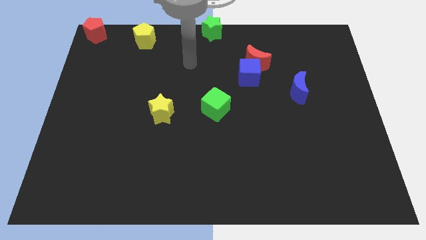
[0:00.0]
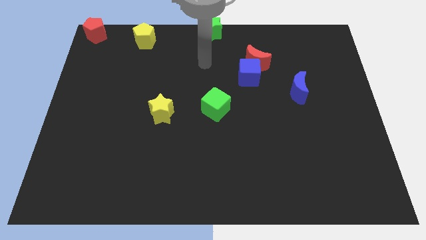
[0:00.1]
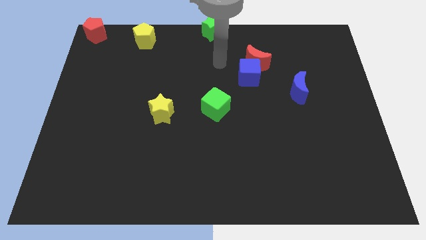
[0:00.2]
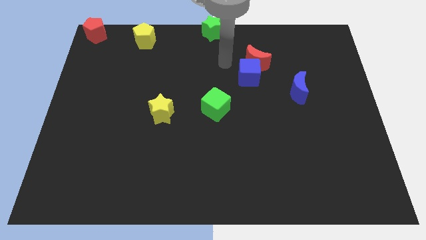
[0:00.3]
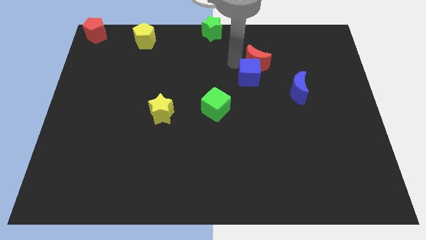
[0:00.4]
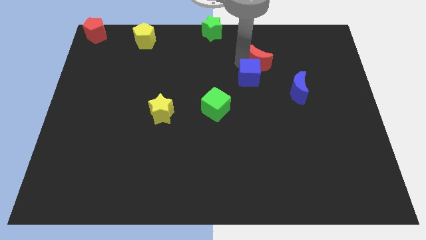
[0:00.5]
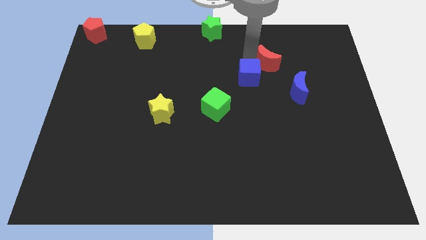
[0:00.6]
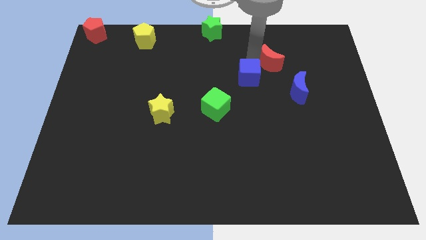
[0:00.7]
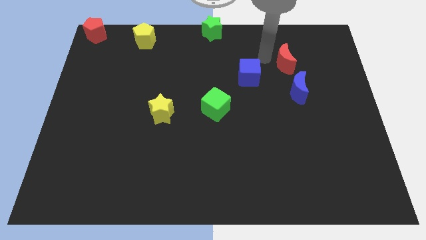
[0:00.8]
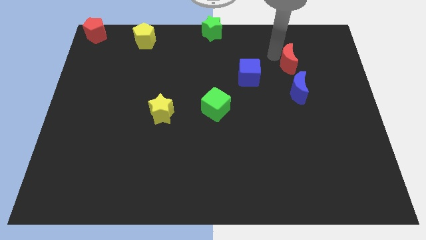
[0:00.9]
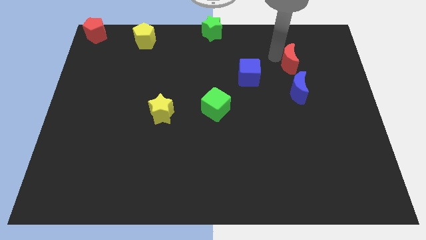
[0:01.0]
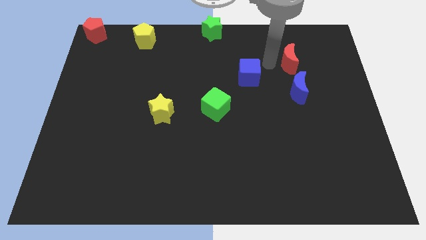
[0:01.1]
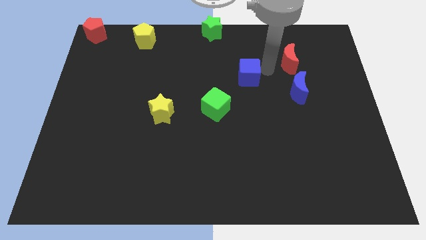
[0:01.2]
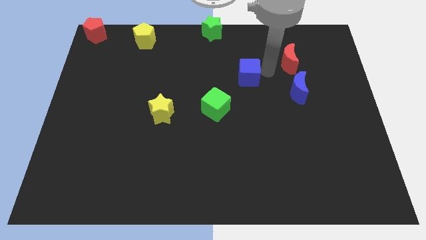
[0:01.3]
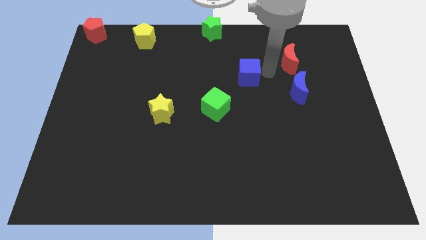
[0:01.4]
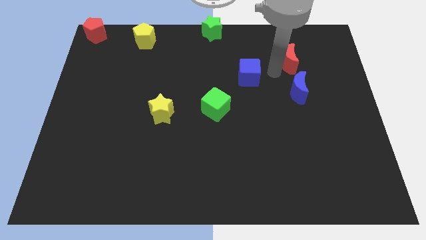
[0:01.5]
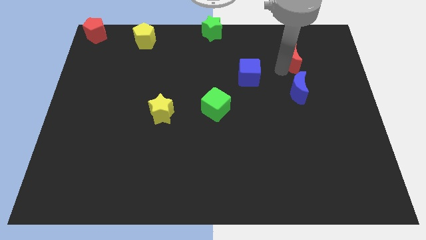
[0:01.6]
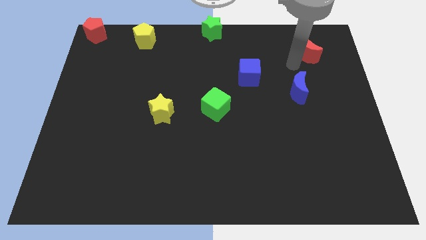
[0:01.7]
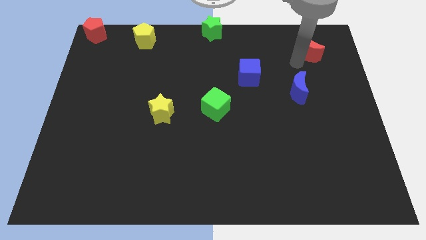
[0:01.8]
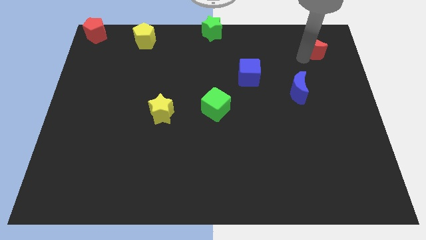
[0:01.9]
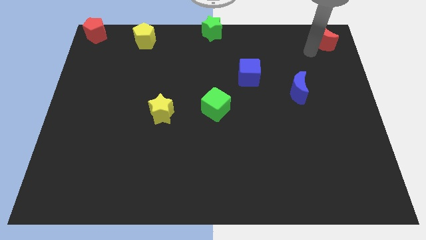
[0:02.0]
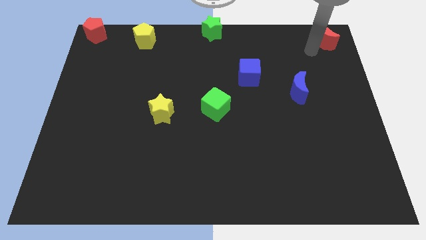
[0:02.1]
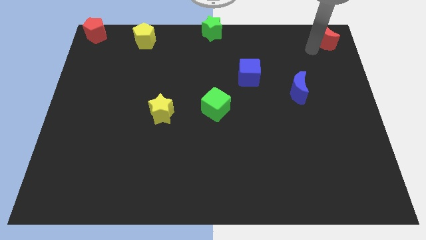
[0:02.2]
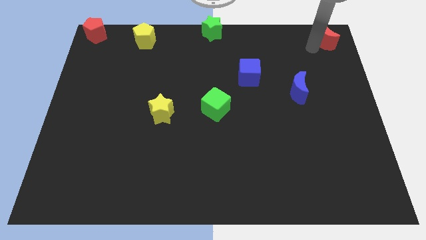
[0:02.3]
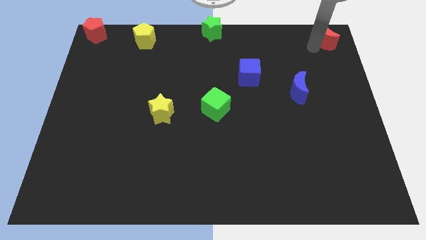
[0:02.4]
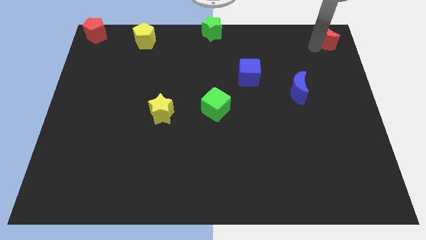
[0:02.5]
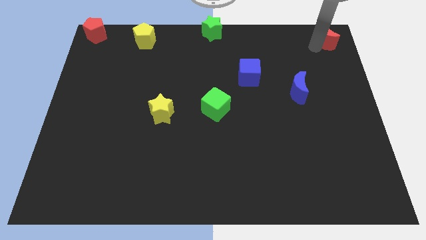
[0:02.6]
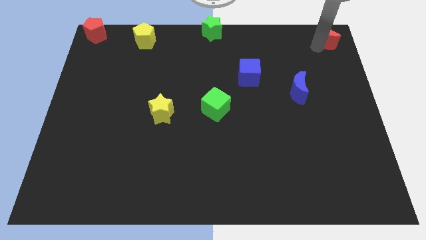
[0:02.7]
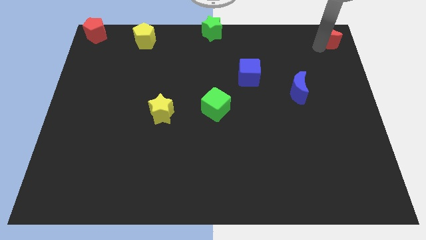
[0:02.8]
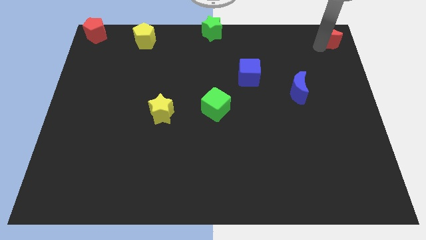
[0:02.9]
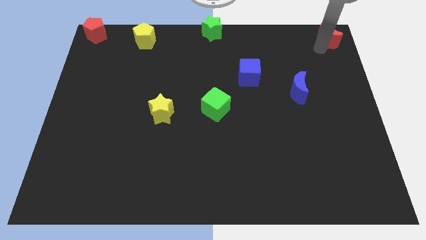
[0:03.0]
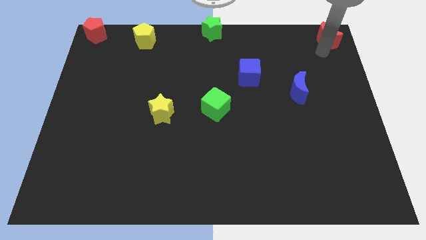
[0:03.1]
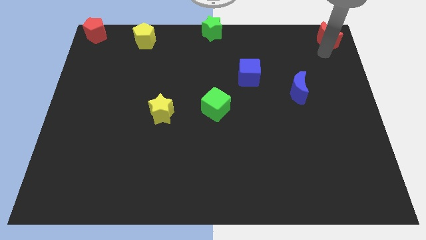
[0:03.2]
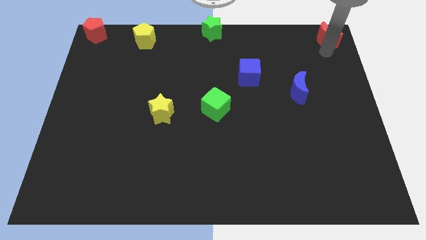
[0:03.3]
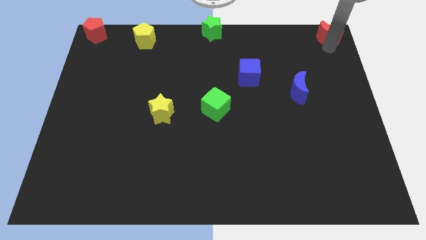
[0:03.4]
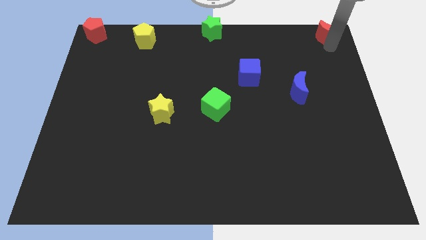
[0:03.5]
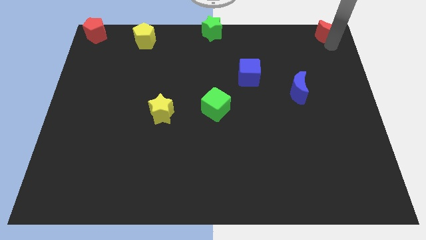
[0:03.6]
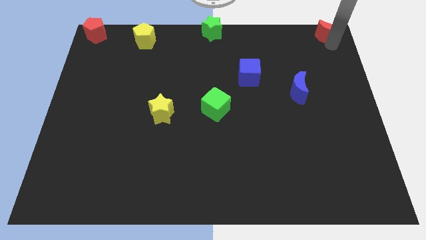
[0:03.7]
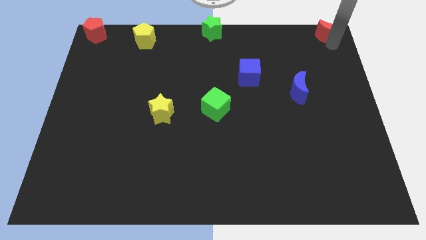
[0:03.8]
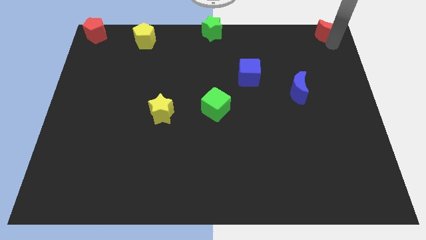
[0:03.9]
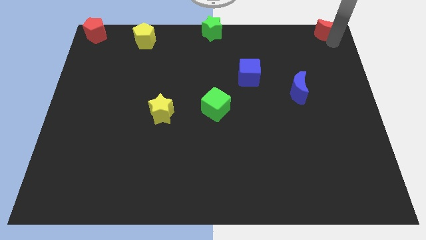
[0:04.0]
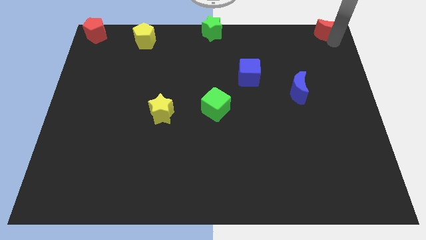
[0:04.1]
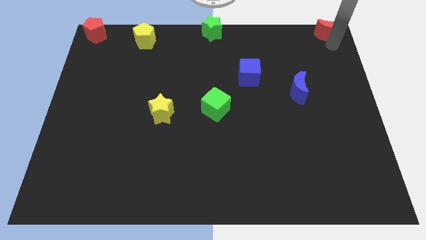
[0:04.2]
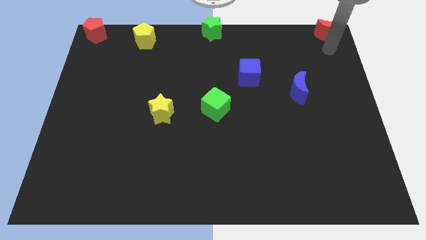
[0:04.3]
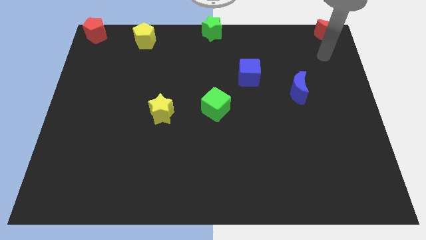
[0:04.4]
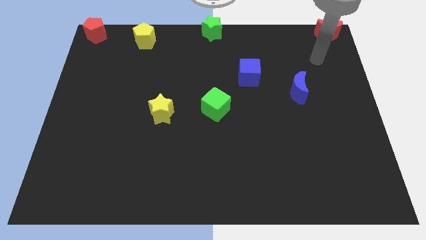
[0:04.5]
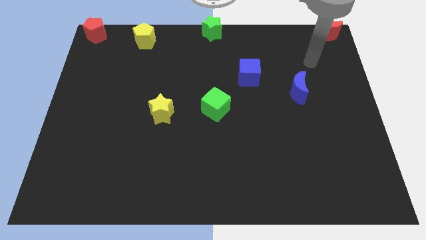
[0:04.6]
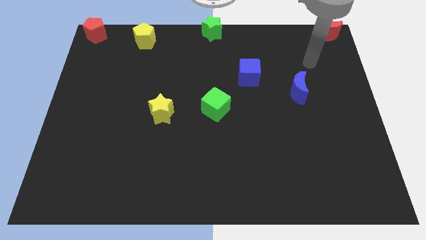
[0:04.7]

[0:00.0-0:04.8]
push the red crecent to the top right corner

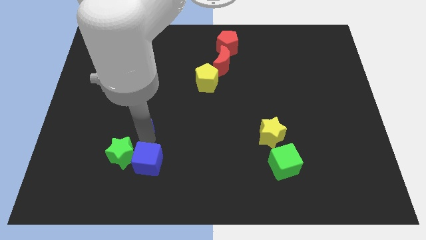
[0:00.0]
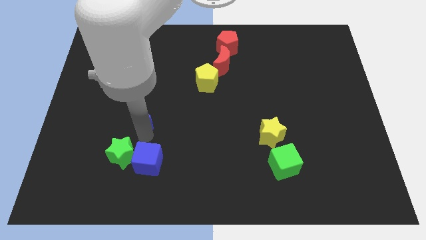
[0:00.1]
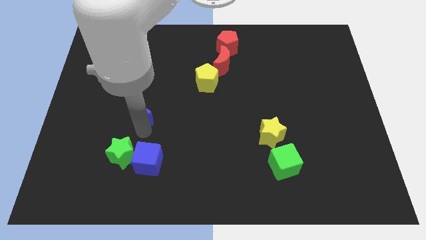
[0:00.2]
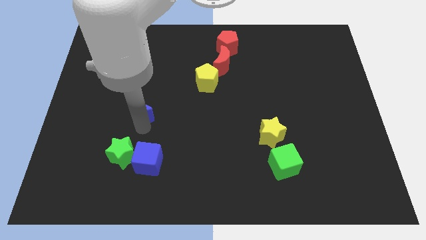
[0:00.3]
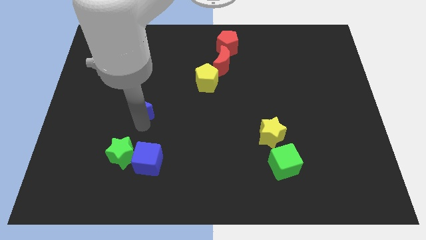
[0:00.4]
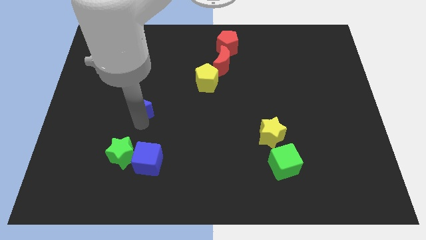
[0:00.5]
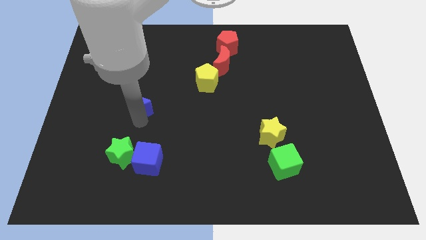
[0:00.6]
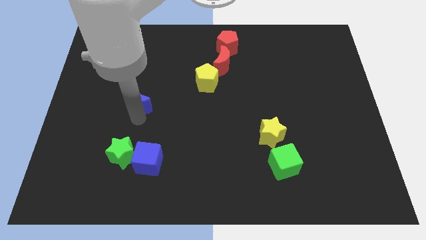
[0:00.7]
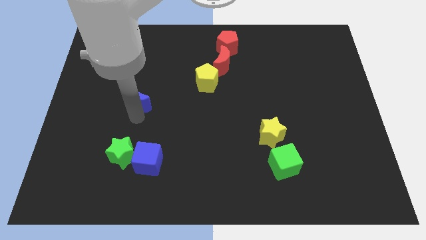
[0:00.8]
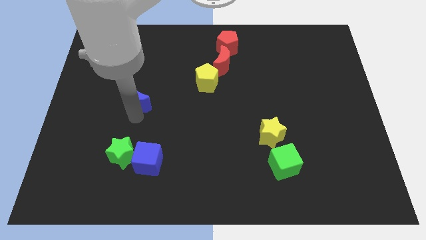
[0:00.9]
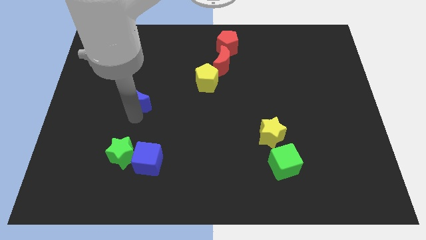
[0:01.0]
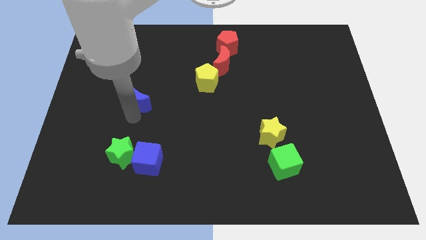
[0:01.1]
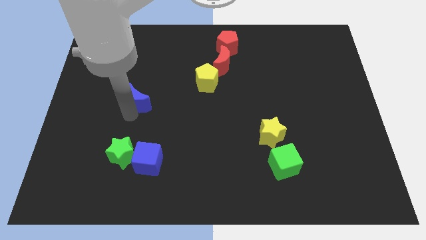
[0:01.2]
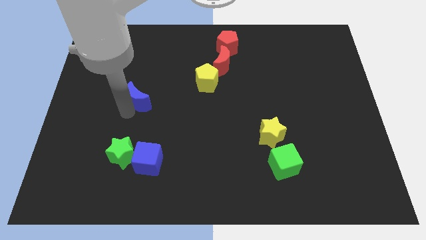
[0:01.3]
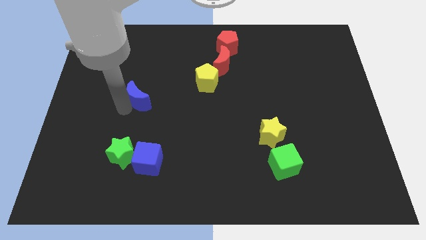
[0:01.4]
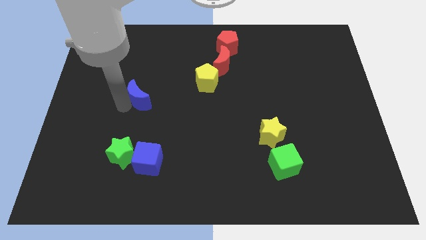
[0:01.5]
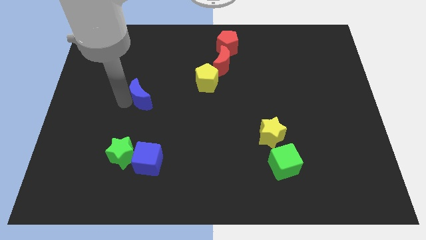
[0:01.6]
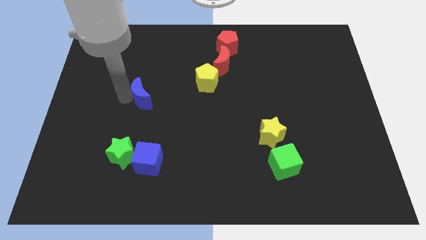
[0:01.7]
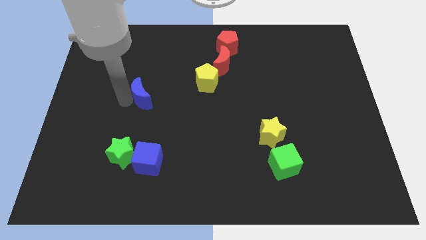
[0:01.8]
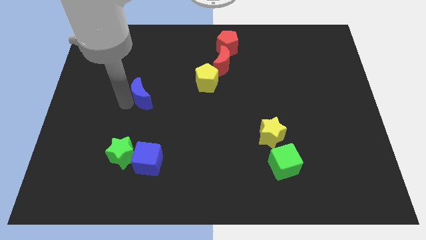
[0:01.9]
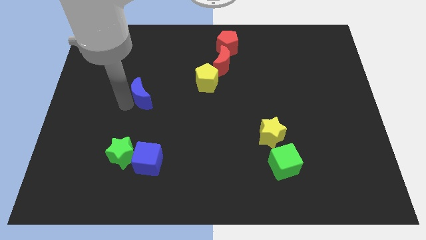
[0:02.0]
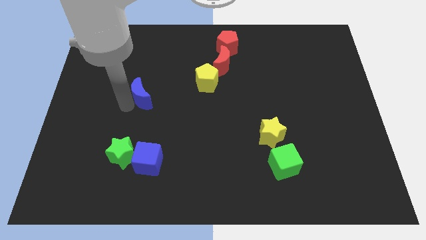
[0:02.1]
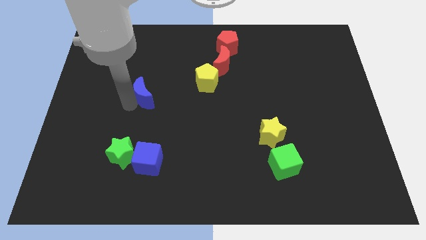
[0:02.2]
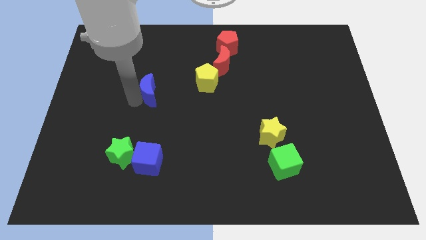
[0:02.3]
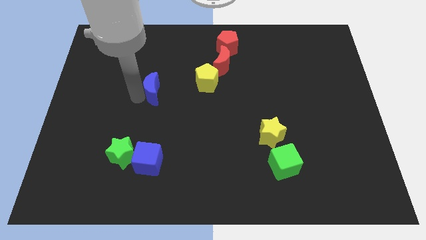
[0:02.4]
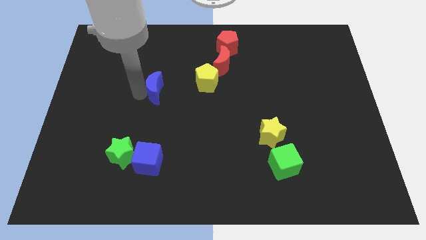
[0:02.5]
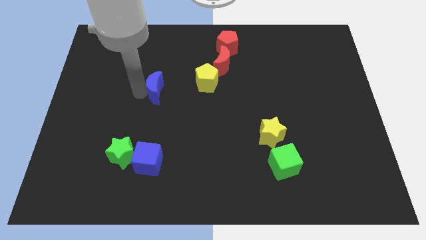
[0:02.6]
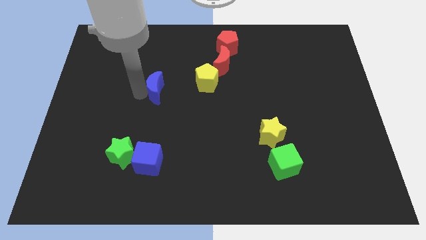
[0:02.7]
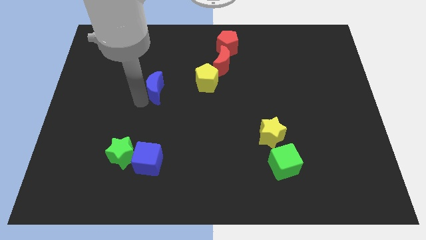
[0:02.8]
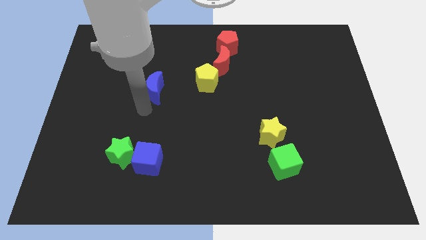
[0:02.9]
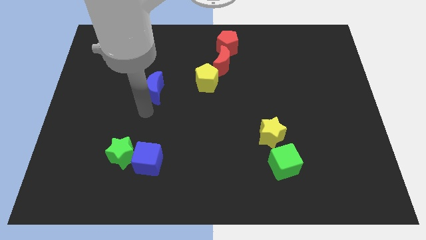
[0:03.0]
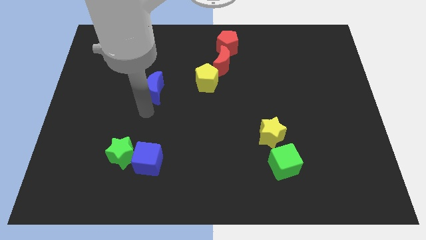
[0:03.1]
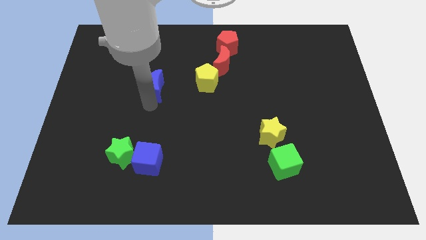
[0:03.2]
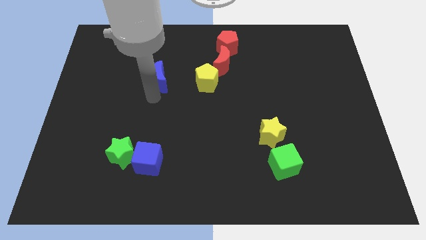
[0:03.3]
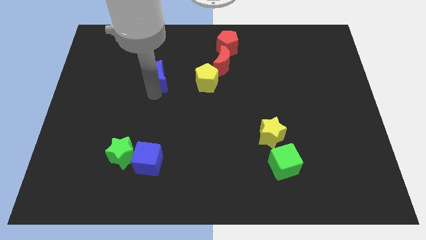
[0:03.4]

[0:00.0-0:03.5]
place the blue moon to the left side of the yellow pentagon

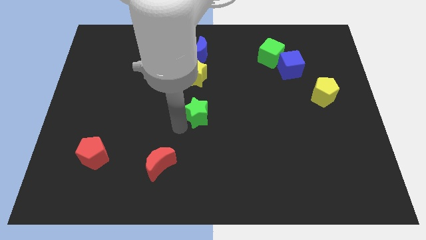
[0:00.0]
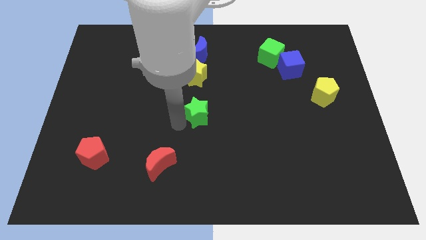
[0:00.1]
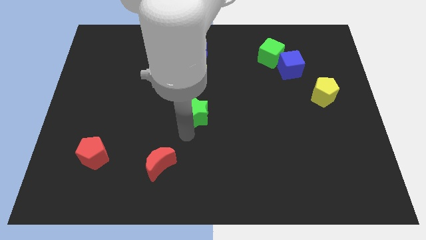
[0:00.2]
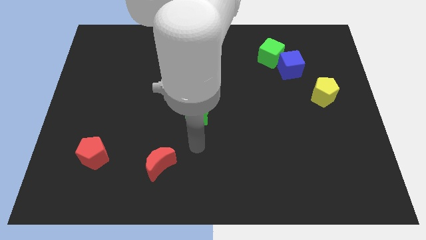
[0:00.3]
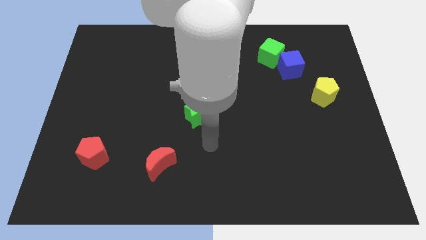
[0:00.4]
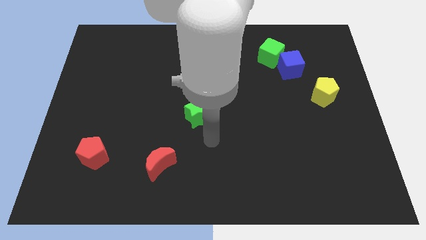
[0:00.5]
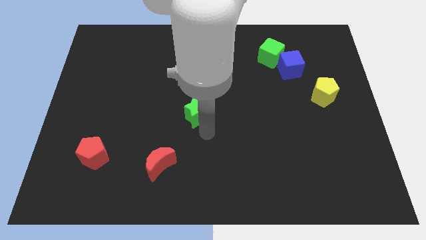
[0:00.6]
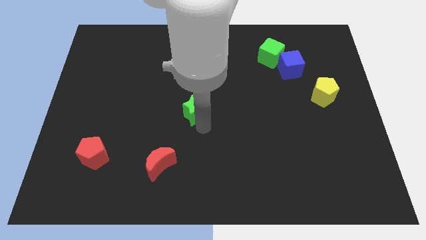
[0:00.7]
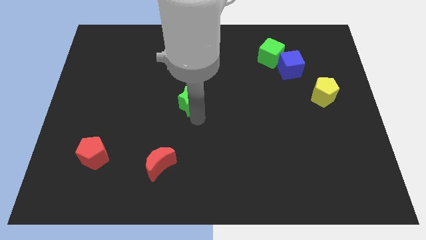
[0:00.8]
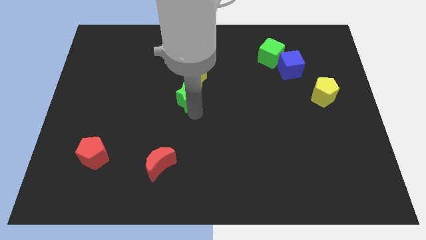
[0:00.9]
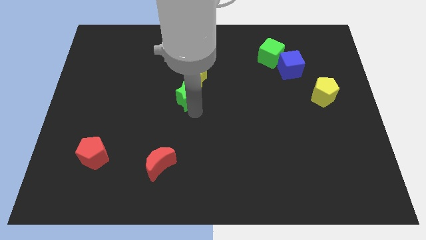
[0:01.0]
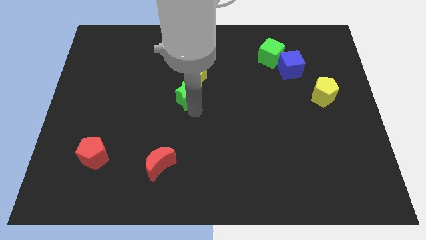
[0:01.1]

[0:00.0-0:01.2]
move green star towards yellow star
